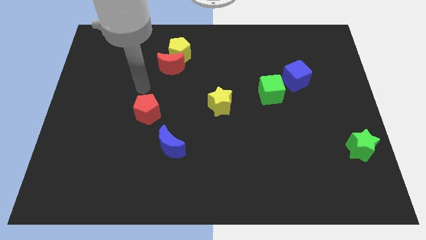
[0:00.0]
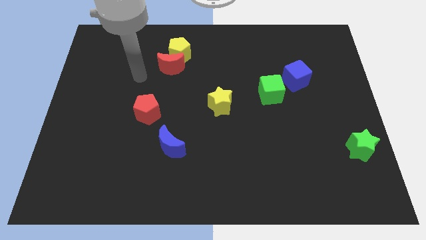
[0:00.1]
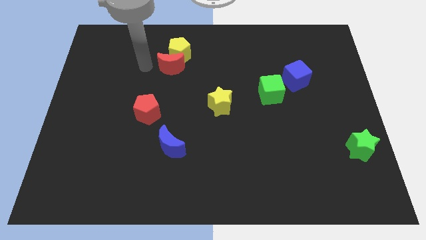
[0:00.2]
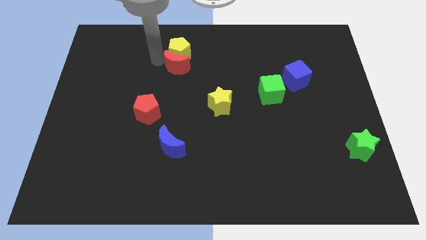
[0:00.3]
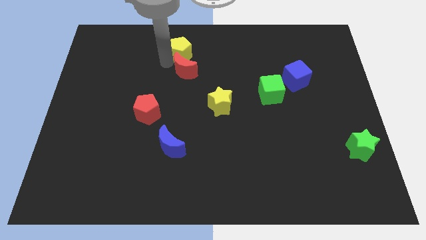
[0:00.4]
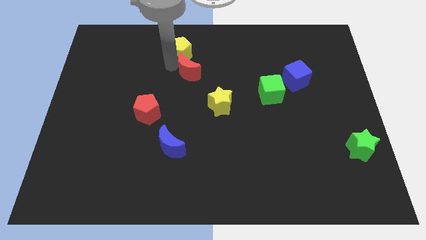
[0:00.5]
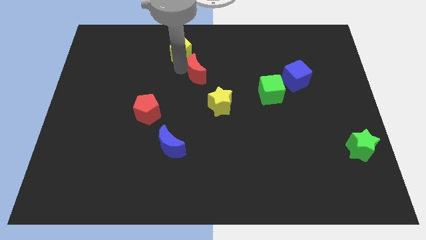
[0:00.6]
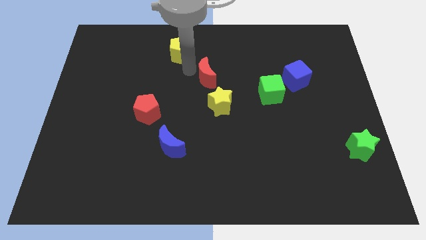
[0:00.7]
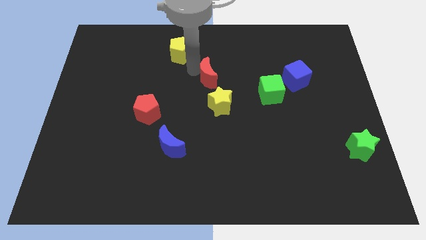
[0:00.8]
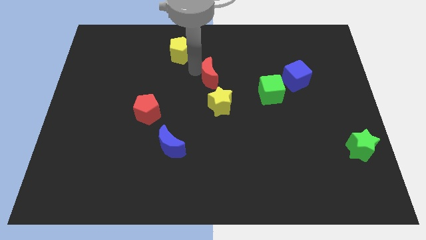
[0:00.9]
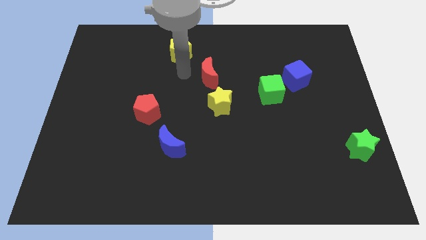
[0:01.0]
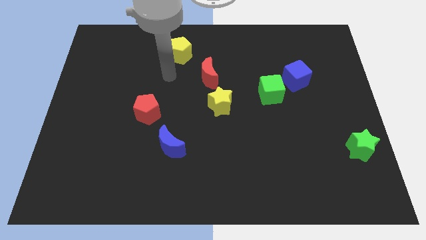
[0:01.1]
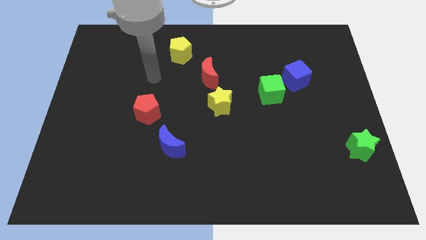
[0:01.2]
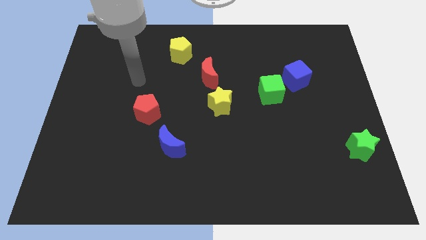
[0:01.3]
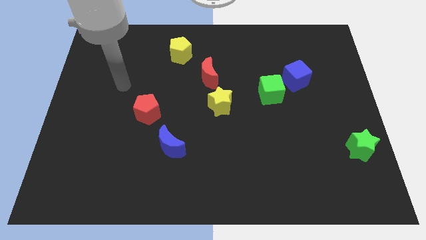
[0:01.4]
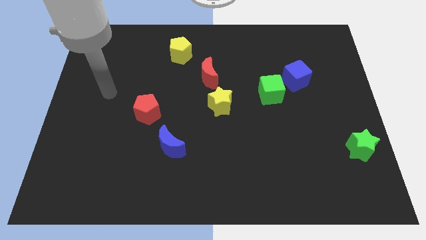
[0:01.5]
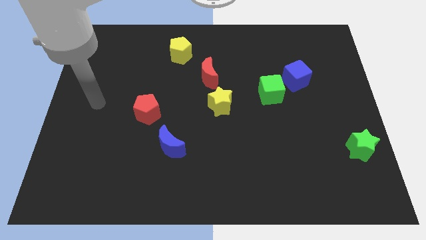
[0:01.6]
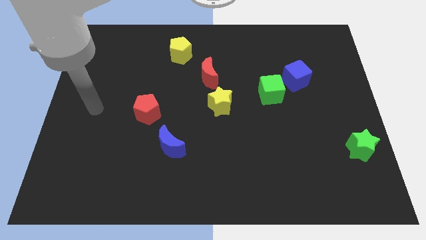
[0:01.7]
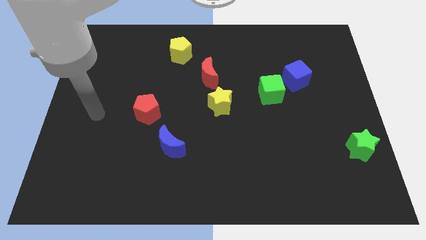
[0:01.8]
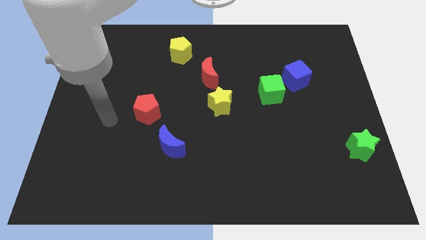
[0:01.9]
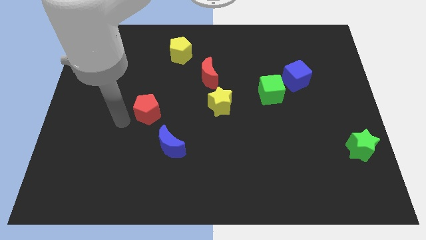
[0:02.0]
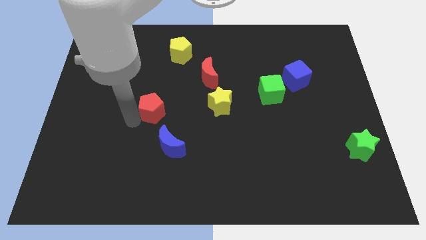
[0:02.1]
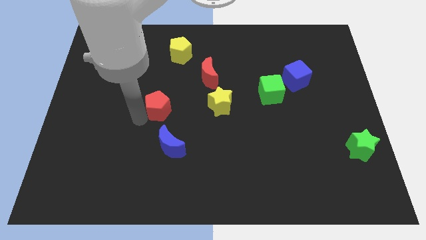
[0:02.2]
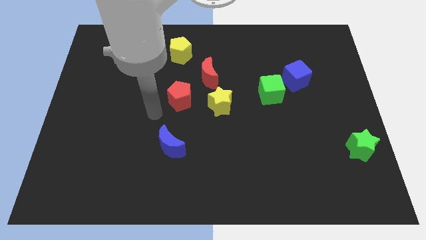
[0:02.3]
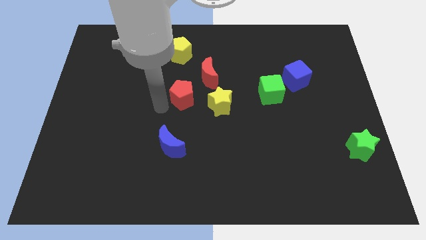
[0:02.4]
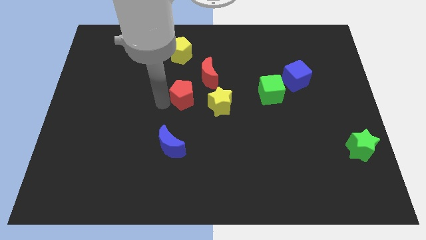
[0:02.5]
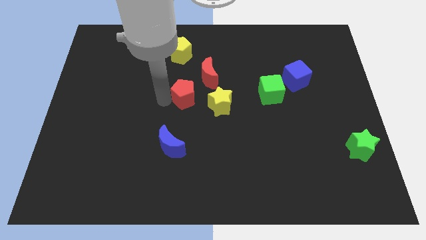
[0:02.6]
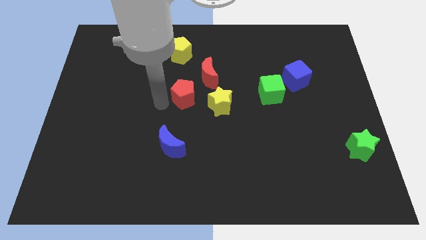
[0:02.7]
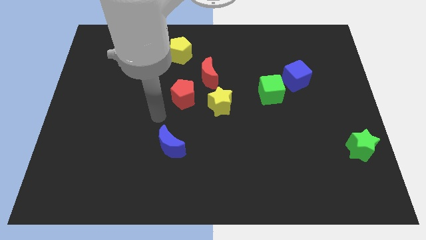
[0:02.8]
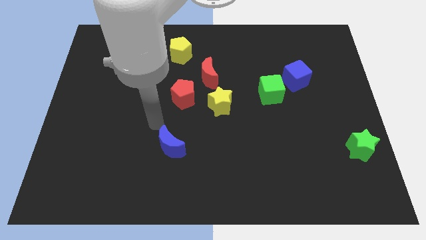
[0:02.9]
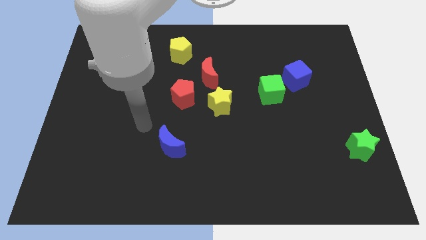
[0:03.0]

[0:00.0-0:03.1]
move the red blocks slightly to the right

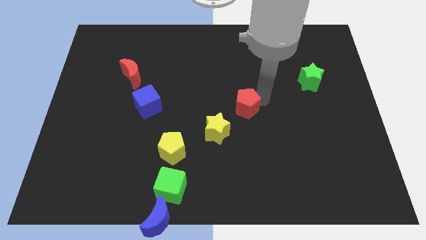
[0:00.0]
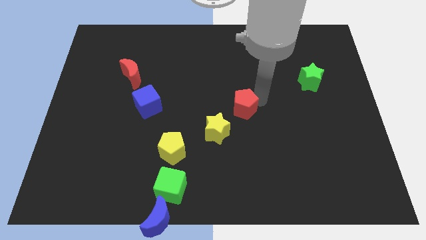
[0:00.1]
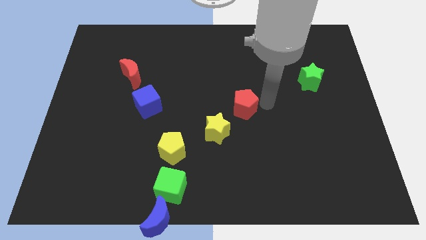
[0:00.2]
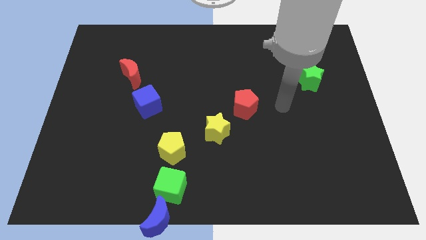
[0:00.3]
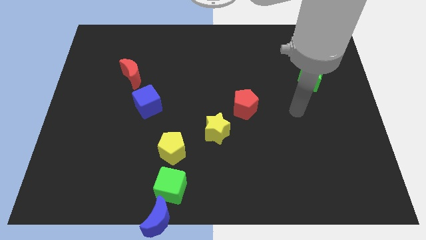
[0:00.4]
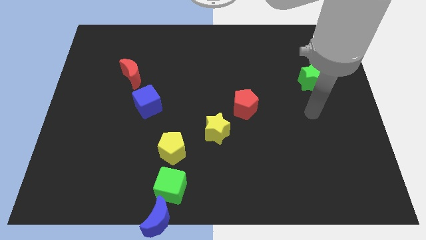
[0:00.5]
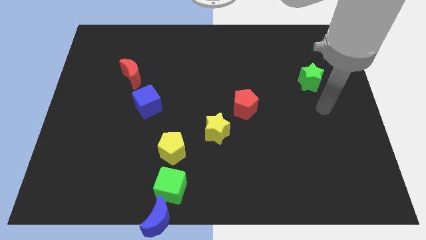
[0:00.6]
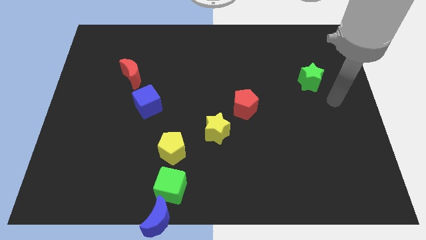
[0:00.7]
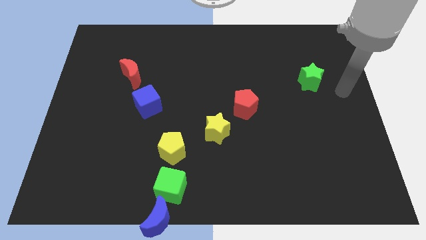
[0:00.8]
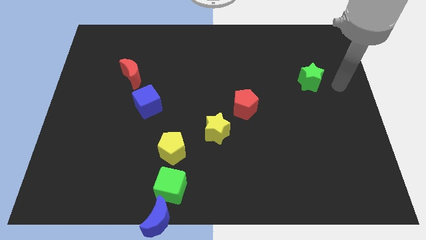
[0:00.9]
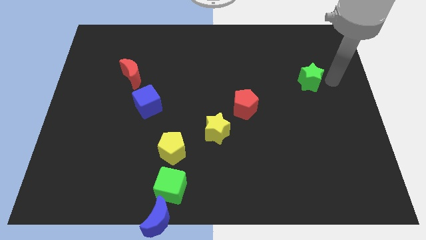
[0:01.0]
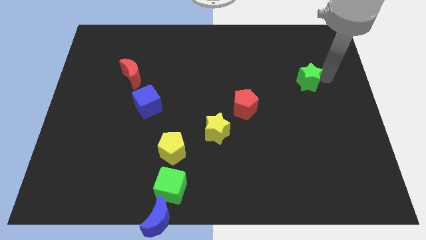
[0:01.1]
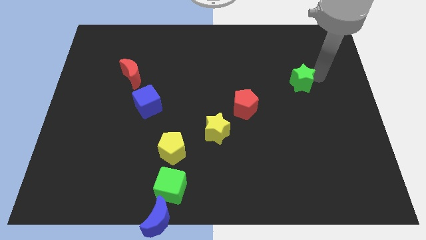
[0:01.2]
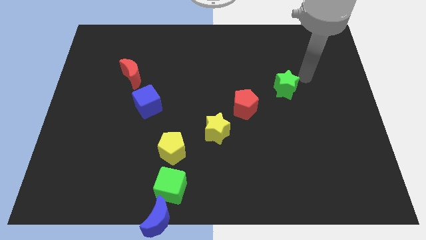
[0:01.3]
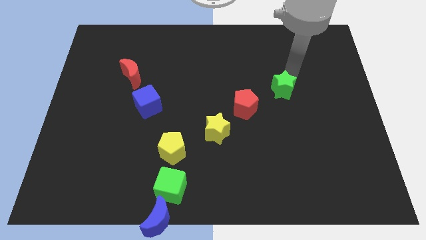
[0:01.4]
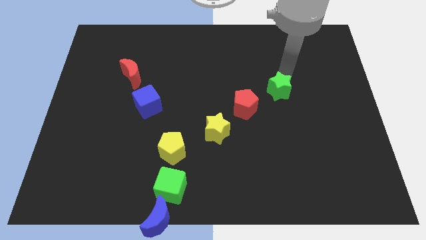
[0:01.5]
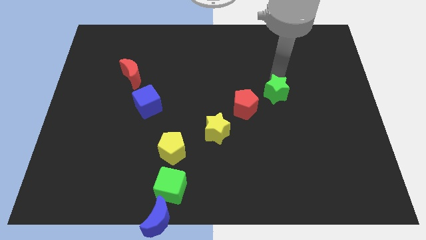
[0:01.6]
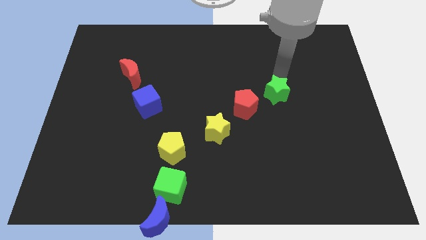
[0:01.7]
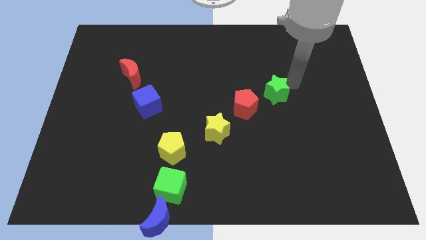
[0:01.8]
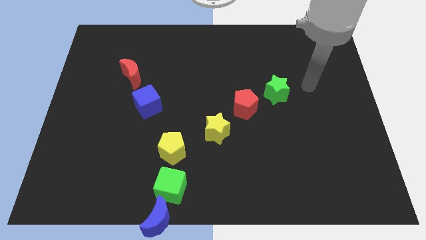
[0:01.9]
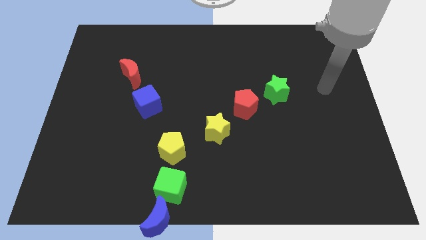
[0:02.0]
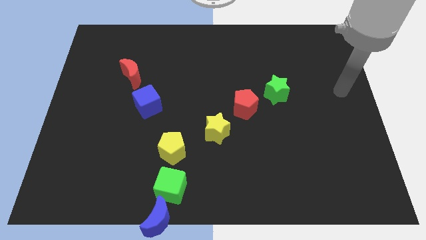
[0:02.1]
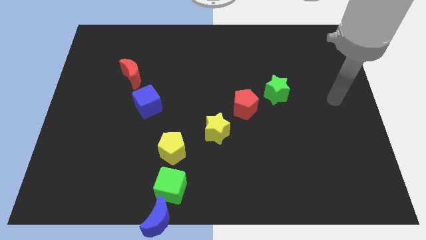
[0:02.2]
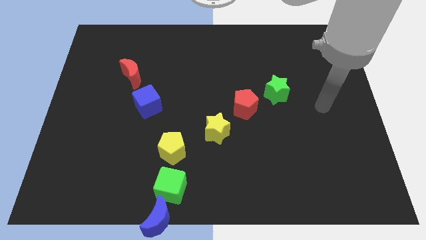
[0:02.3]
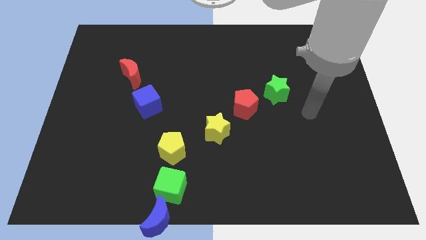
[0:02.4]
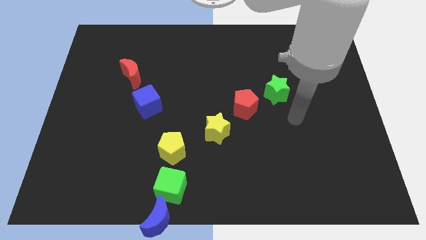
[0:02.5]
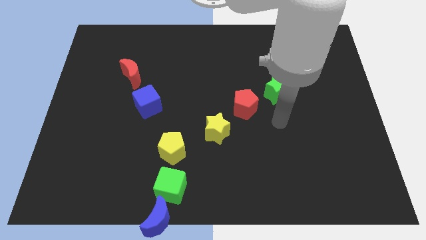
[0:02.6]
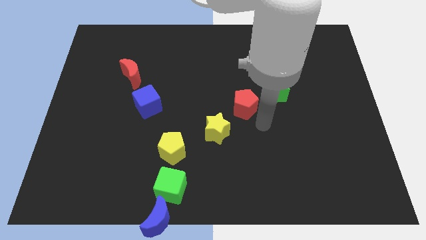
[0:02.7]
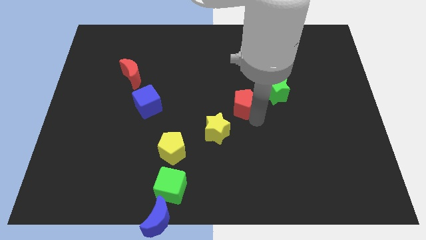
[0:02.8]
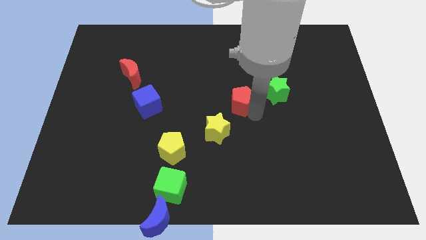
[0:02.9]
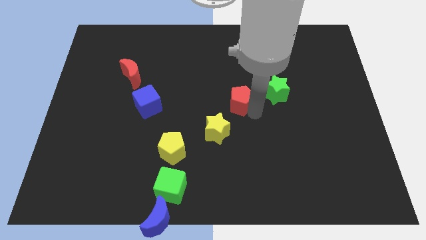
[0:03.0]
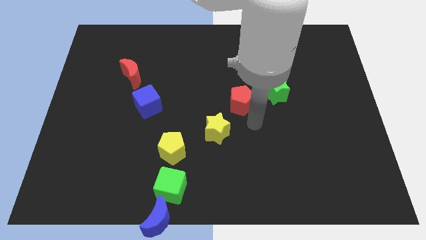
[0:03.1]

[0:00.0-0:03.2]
slightly move the red pentagon up

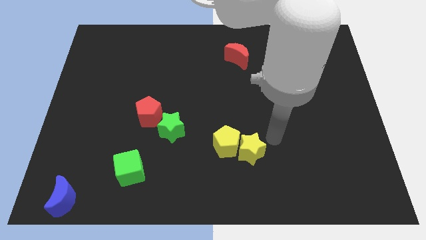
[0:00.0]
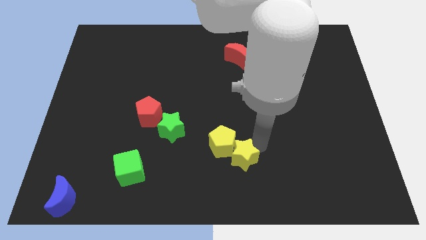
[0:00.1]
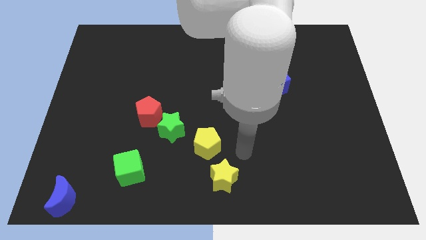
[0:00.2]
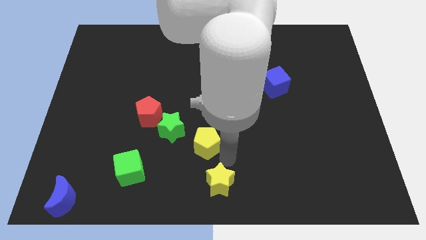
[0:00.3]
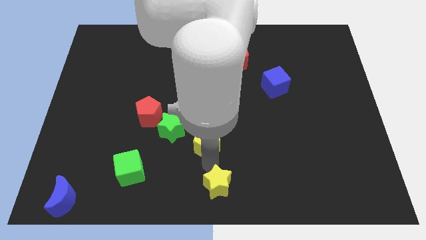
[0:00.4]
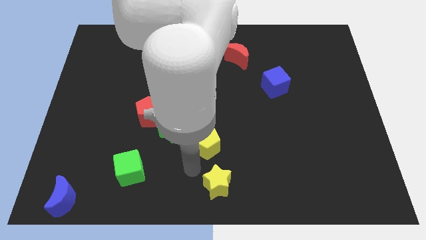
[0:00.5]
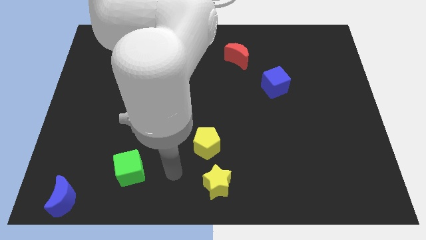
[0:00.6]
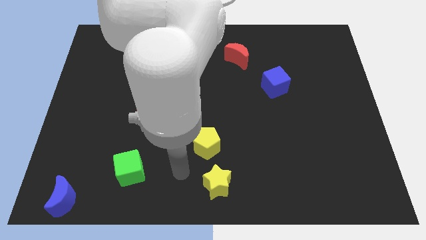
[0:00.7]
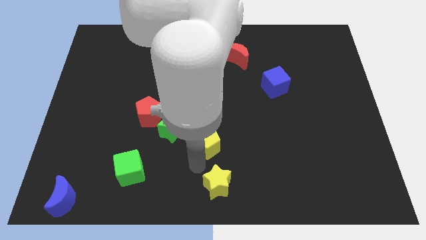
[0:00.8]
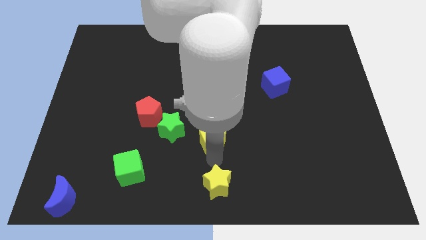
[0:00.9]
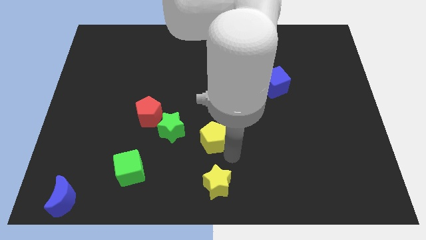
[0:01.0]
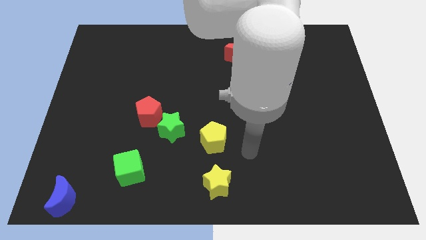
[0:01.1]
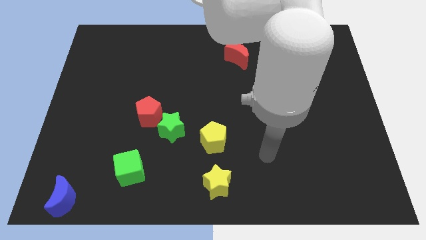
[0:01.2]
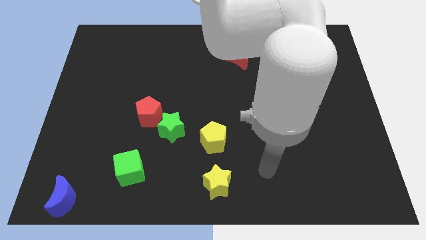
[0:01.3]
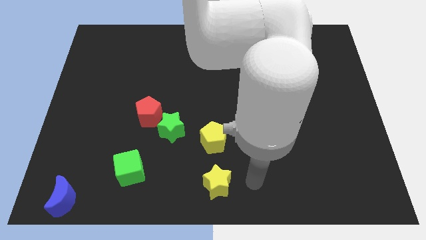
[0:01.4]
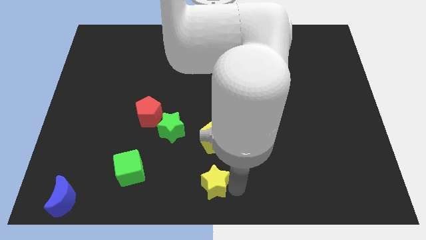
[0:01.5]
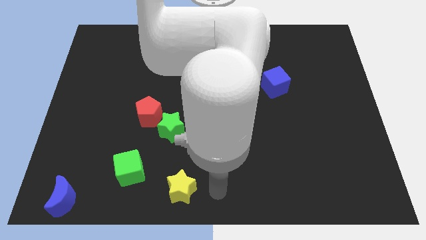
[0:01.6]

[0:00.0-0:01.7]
put the yellow star below the yellow pentagon

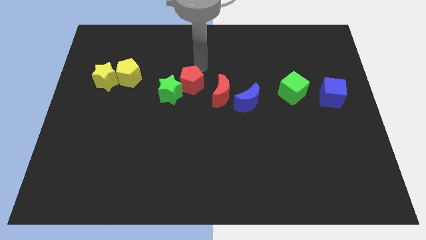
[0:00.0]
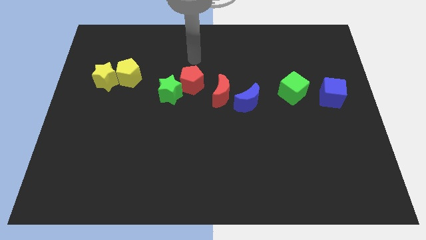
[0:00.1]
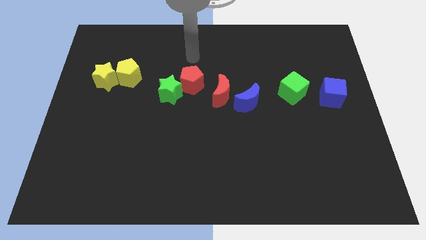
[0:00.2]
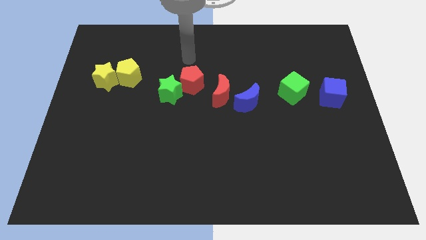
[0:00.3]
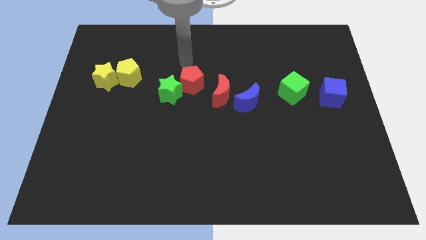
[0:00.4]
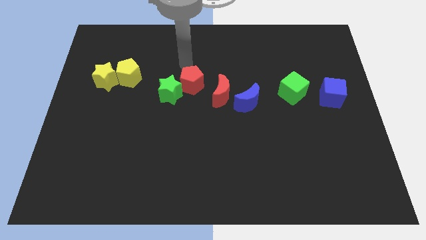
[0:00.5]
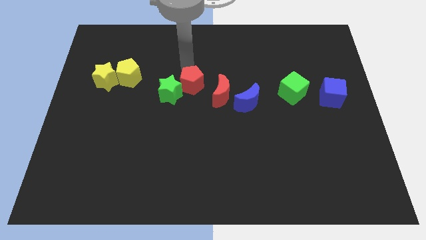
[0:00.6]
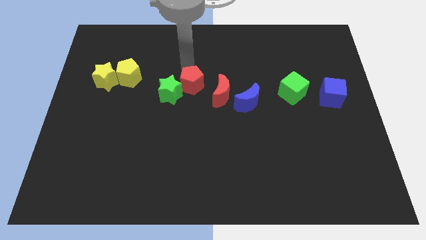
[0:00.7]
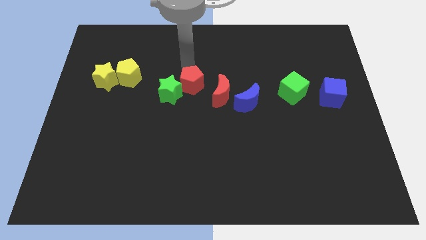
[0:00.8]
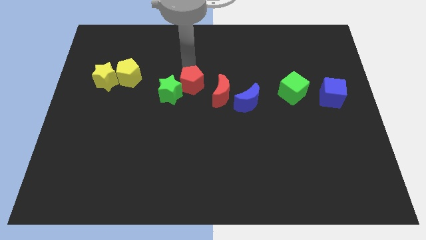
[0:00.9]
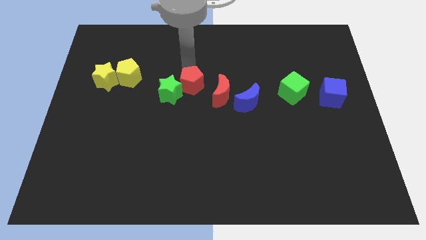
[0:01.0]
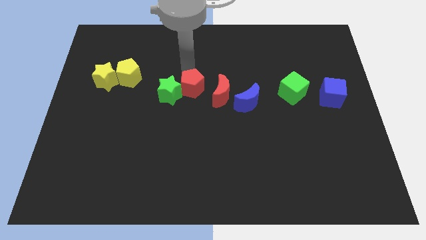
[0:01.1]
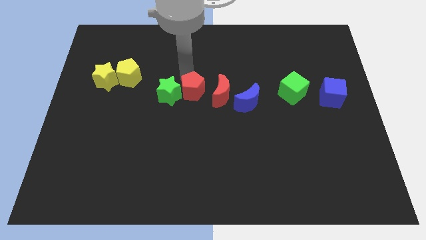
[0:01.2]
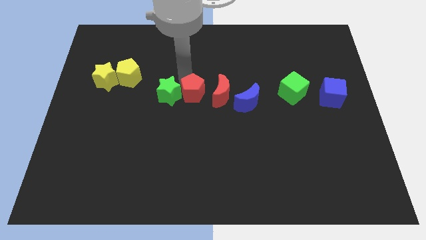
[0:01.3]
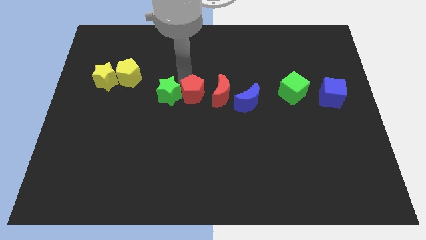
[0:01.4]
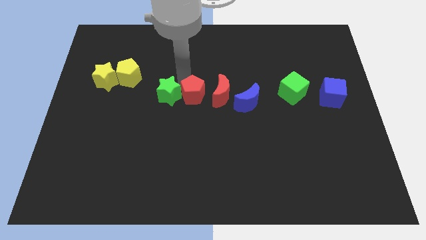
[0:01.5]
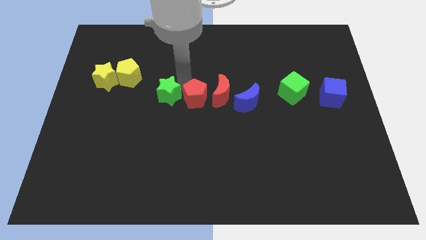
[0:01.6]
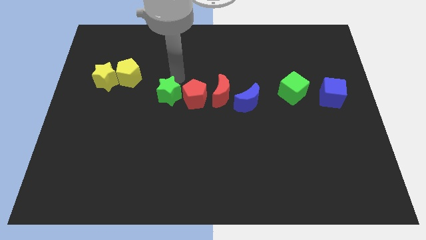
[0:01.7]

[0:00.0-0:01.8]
push the red pentagon in between the red crescent and green star
